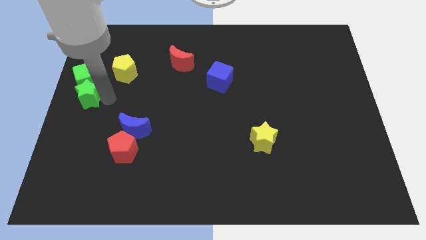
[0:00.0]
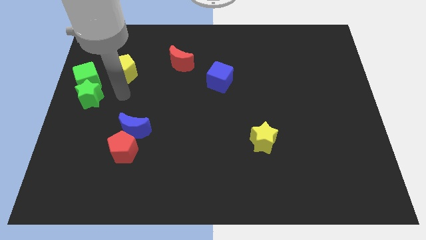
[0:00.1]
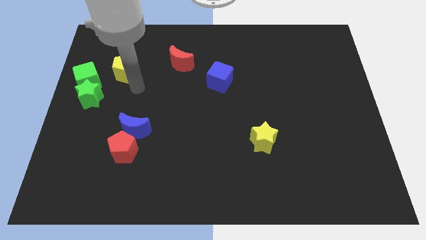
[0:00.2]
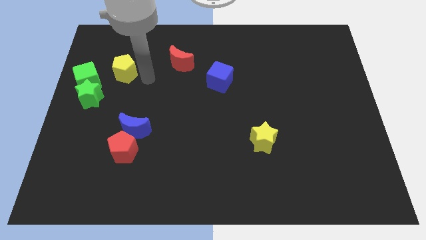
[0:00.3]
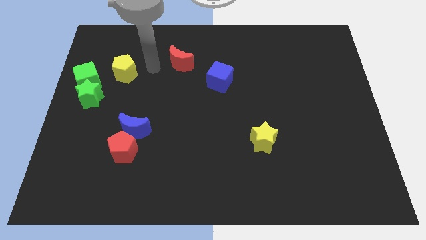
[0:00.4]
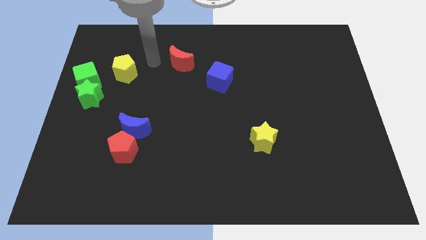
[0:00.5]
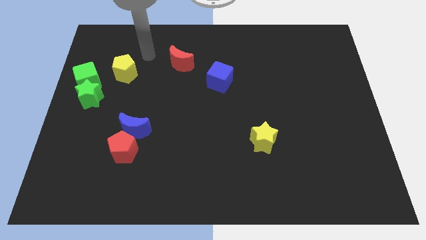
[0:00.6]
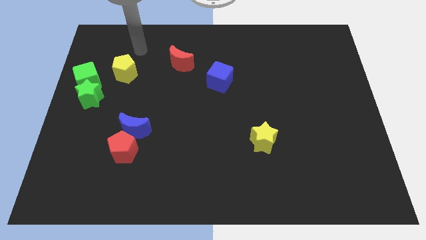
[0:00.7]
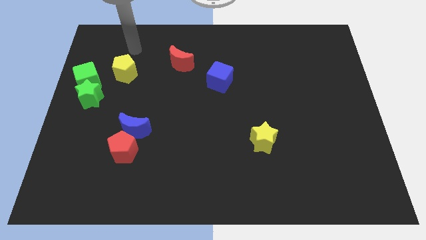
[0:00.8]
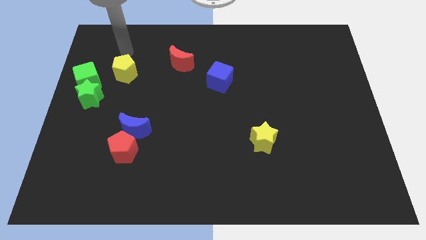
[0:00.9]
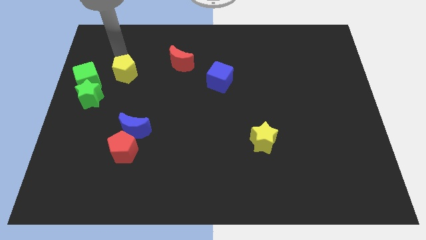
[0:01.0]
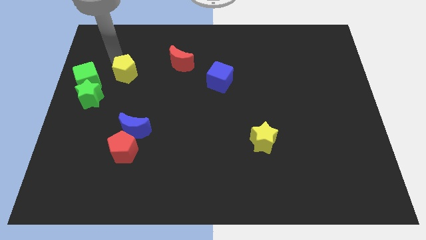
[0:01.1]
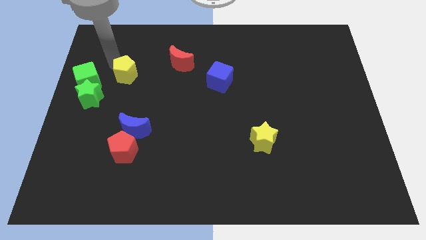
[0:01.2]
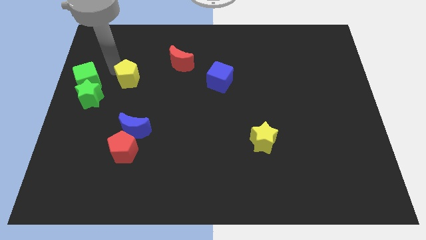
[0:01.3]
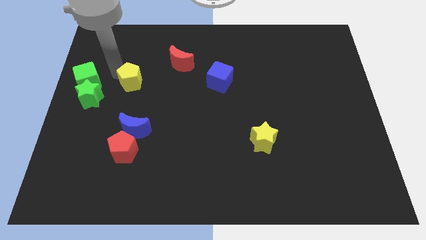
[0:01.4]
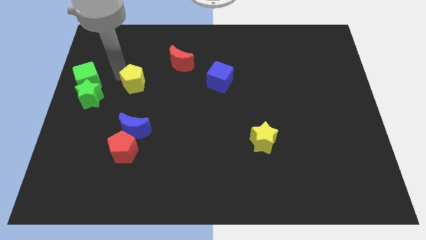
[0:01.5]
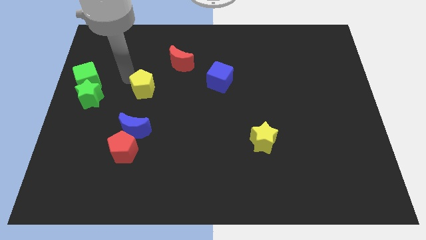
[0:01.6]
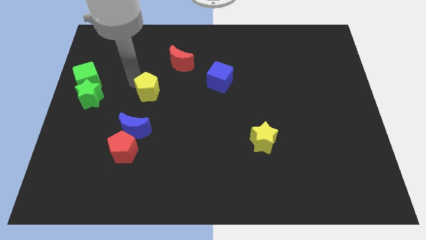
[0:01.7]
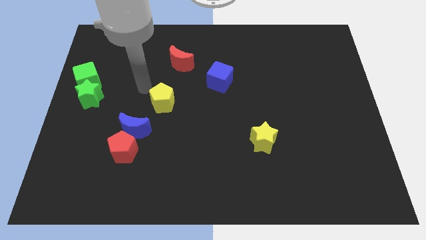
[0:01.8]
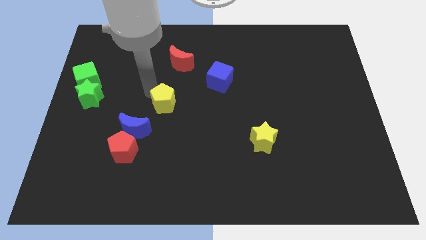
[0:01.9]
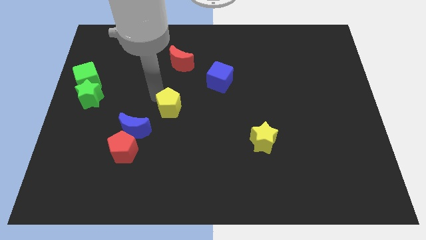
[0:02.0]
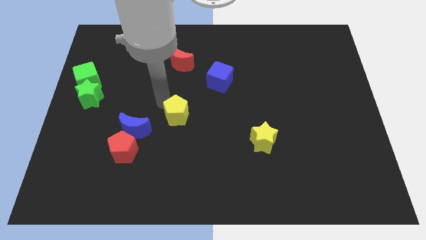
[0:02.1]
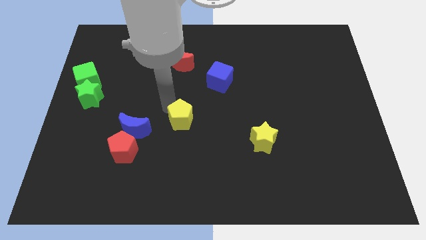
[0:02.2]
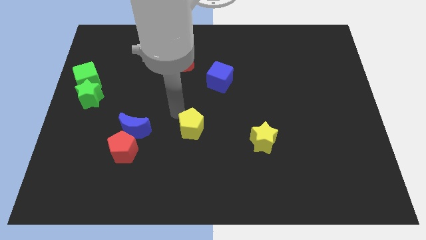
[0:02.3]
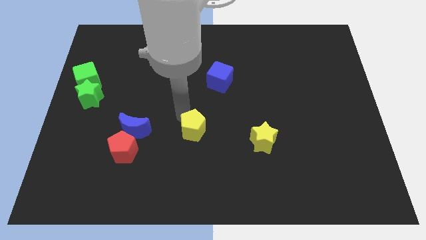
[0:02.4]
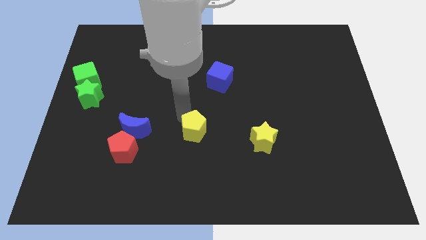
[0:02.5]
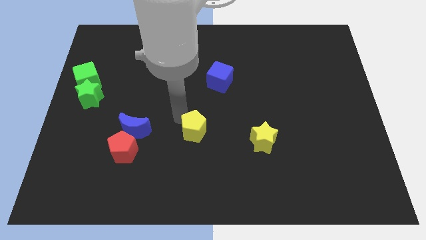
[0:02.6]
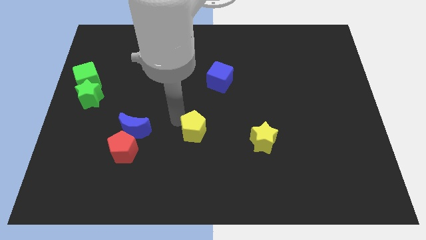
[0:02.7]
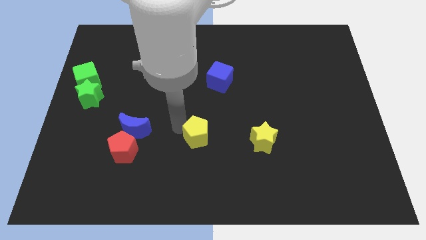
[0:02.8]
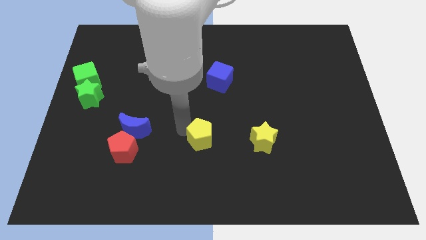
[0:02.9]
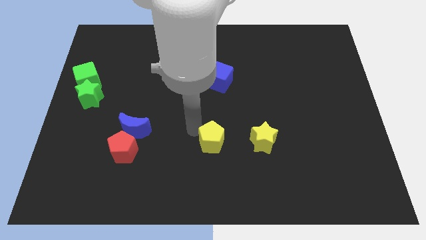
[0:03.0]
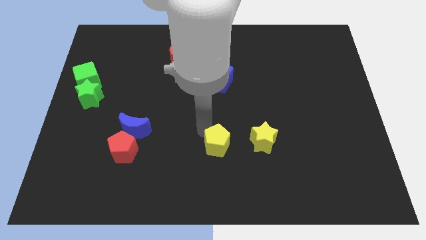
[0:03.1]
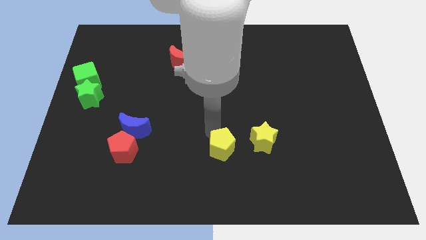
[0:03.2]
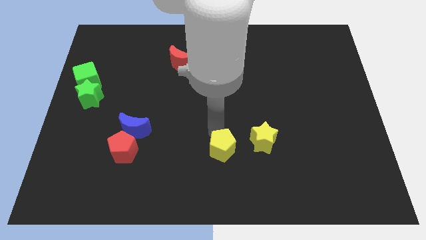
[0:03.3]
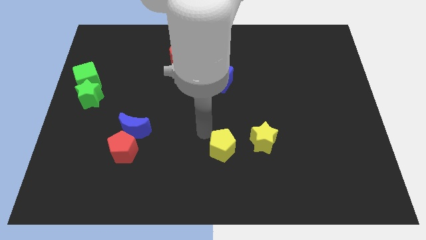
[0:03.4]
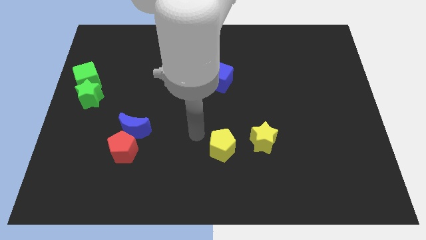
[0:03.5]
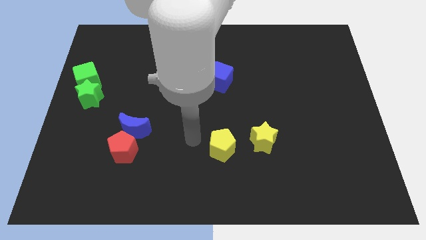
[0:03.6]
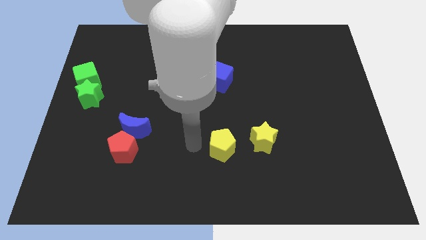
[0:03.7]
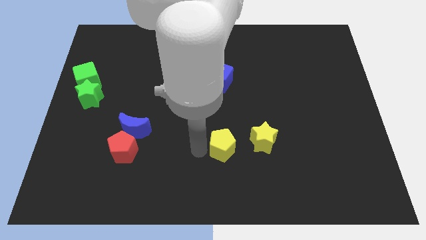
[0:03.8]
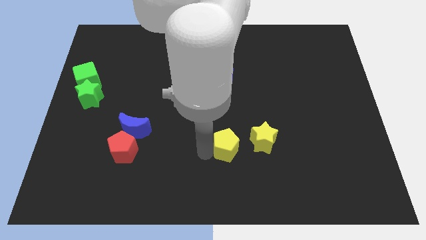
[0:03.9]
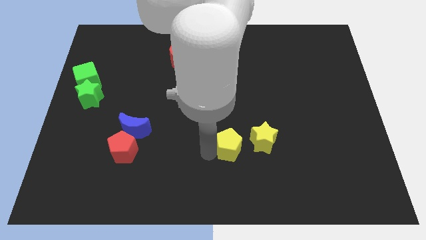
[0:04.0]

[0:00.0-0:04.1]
slide the yellow pentagon to the bottom center of the board

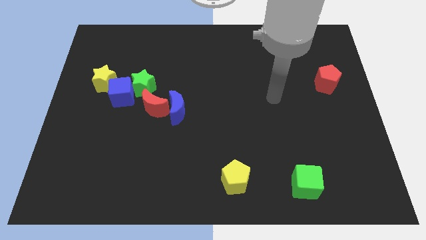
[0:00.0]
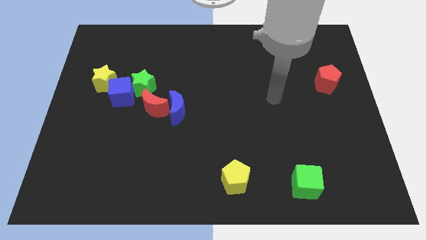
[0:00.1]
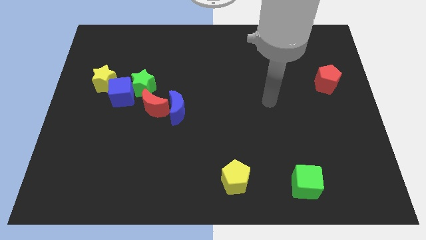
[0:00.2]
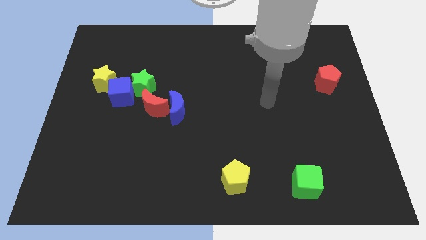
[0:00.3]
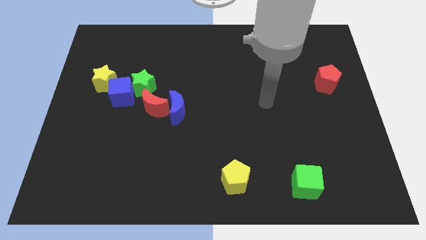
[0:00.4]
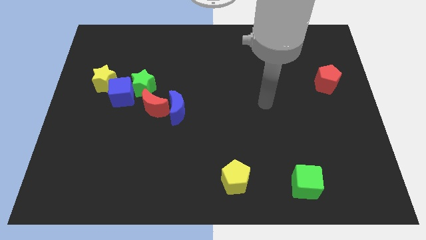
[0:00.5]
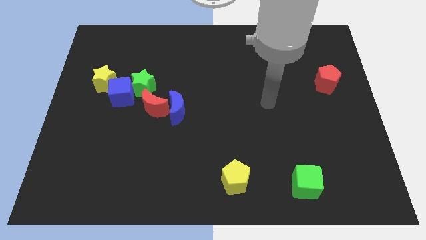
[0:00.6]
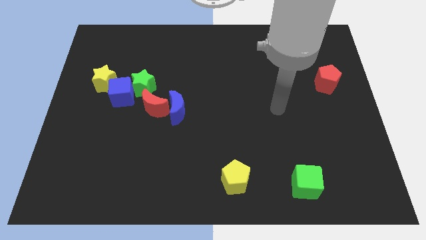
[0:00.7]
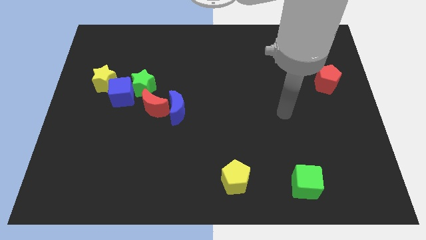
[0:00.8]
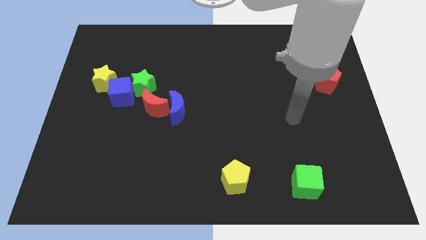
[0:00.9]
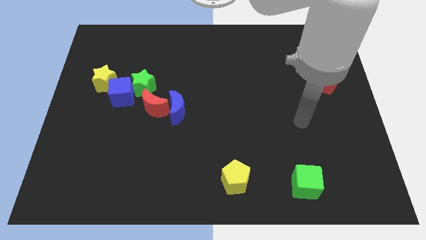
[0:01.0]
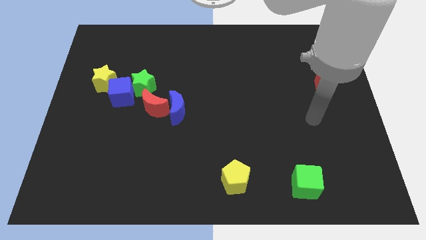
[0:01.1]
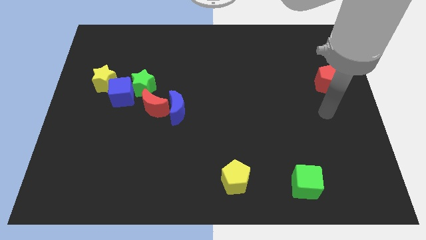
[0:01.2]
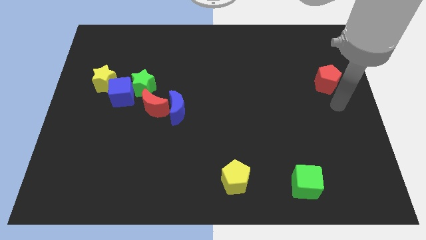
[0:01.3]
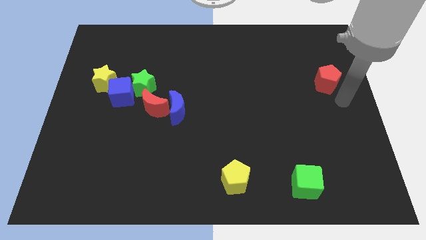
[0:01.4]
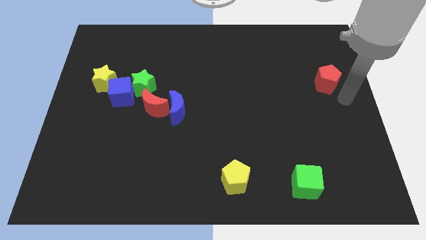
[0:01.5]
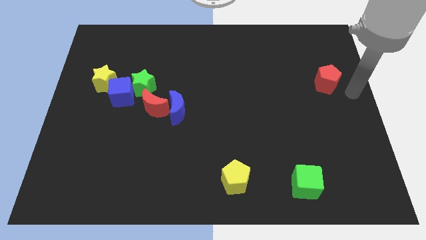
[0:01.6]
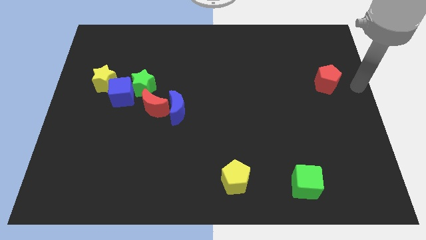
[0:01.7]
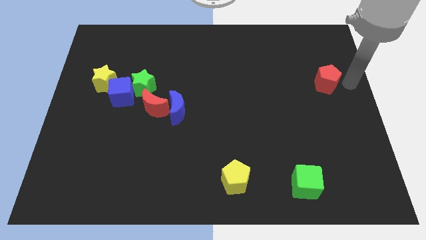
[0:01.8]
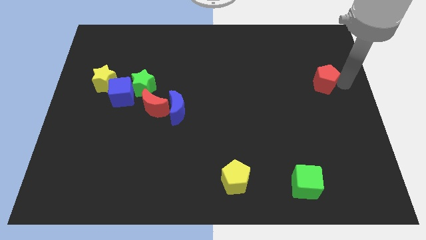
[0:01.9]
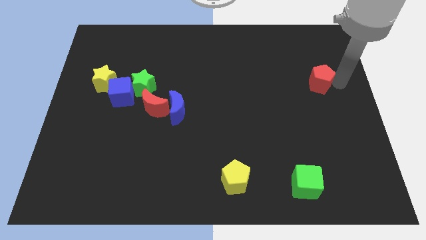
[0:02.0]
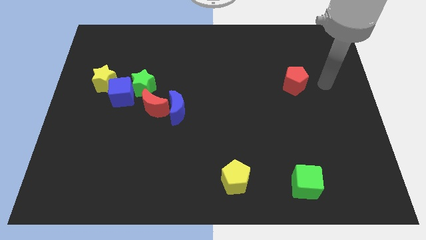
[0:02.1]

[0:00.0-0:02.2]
place the red pentagon above the green cube

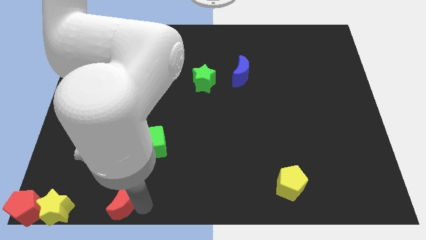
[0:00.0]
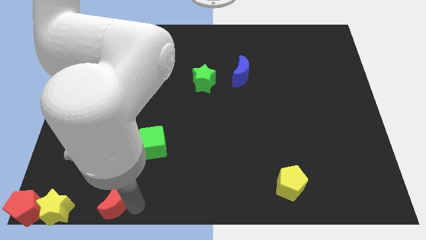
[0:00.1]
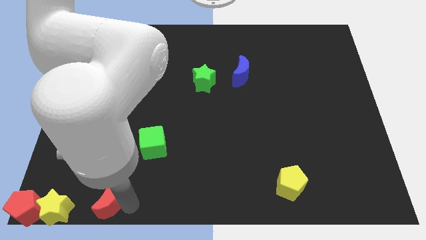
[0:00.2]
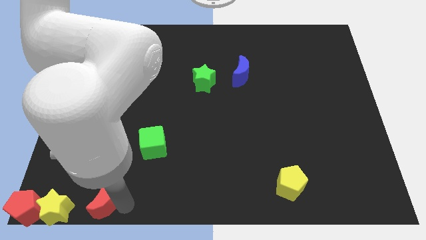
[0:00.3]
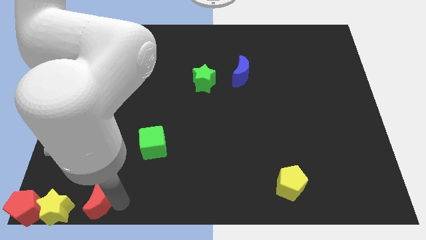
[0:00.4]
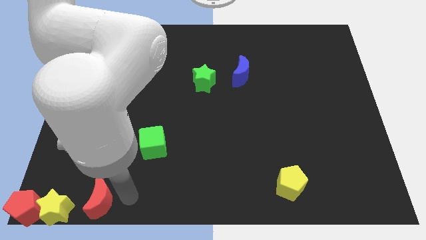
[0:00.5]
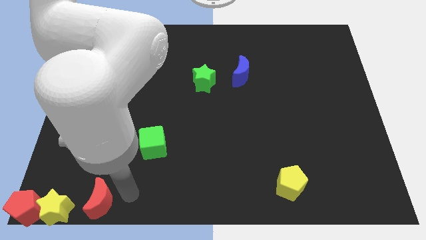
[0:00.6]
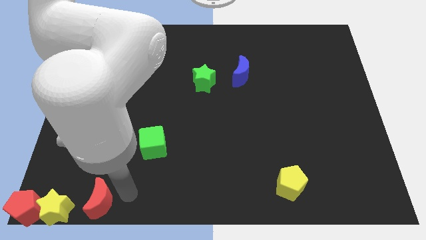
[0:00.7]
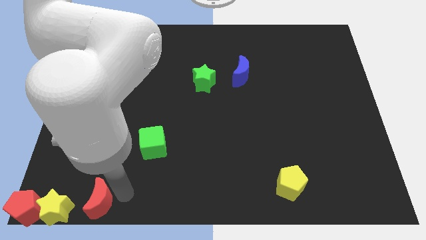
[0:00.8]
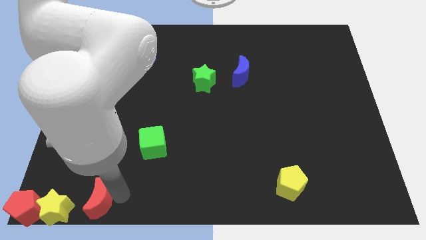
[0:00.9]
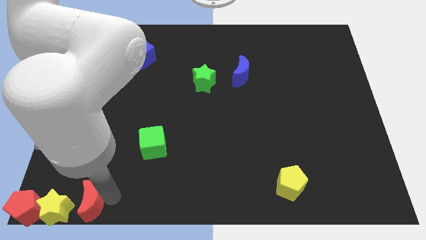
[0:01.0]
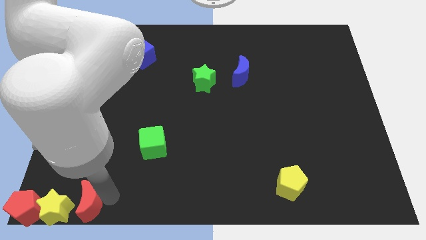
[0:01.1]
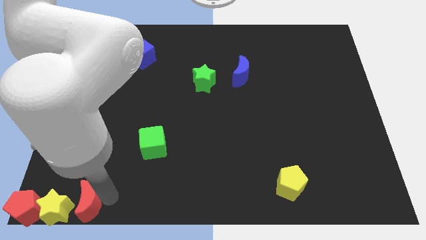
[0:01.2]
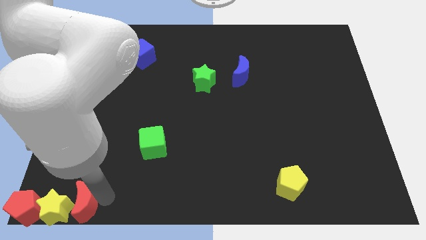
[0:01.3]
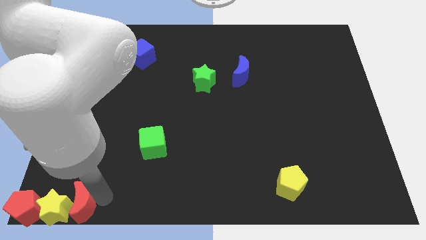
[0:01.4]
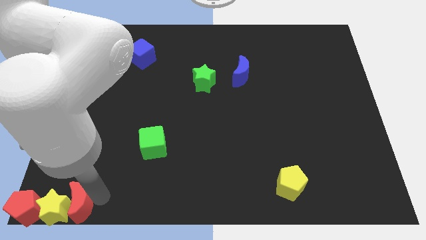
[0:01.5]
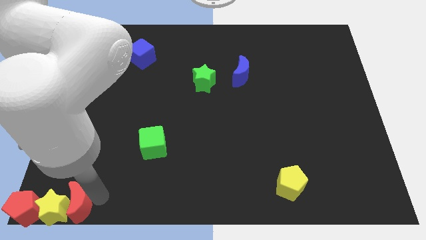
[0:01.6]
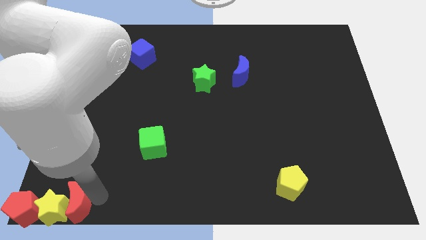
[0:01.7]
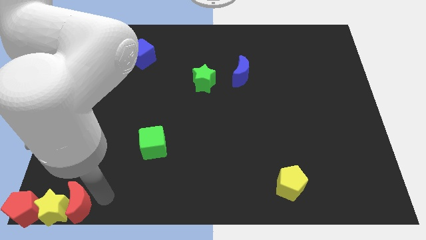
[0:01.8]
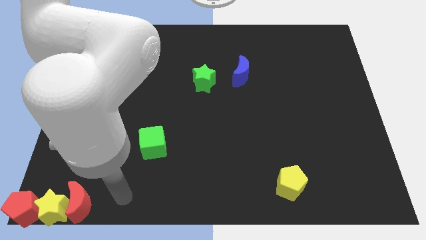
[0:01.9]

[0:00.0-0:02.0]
push the red crescent into group of blocks

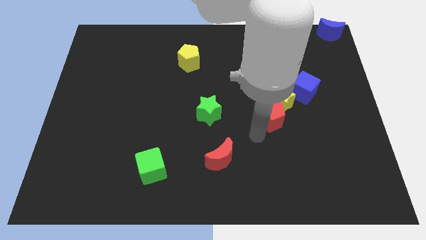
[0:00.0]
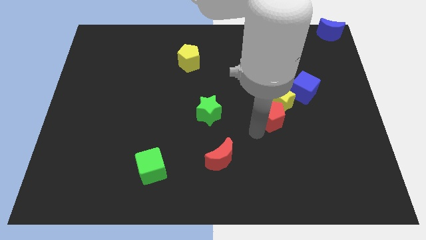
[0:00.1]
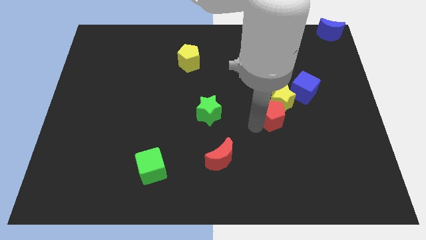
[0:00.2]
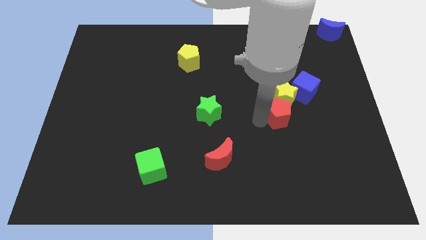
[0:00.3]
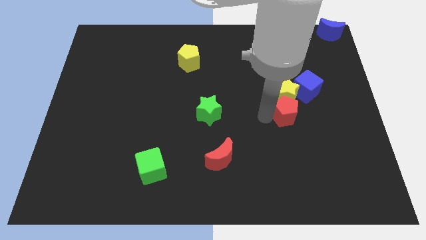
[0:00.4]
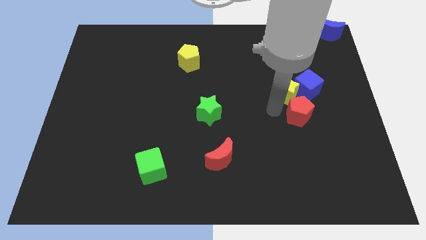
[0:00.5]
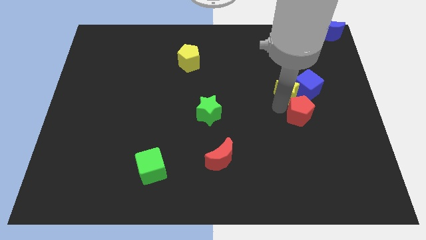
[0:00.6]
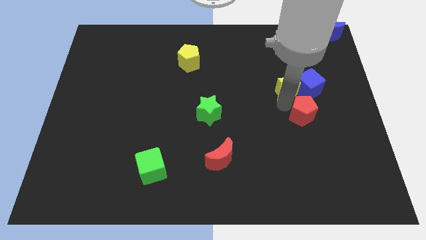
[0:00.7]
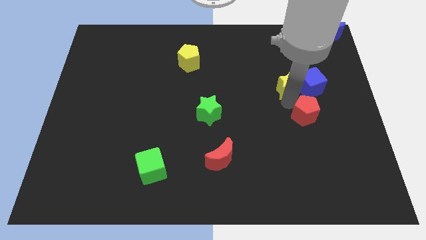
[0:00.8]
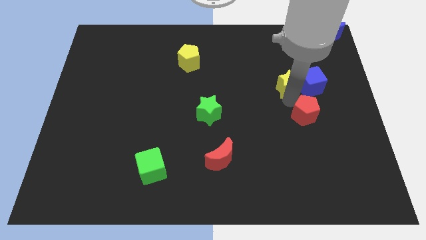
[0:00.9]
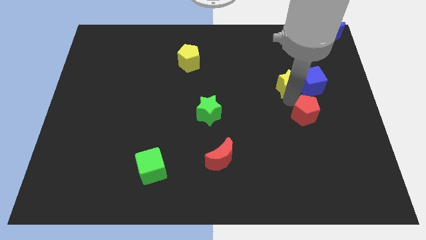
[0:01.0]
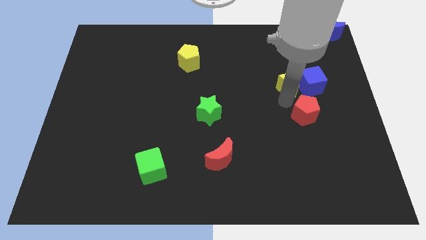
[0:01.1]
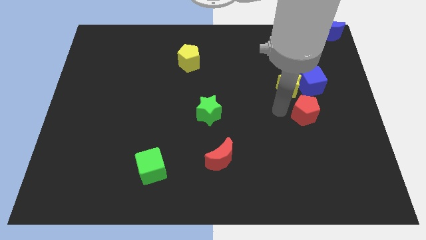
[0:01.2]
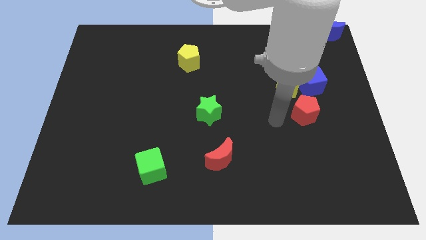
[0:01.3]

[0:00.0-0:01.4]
move red pentagon and yellow star to the blue cube
